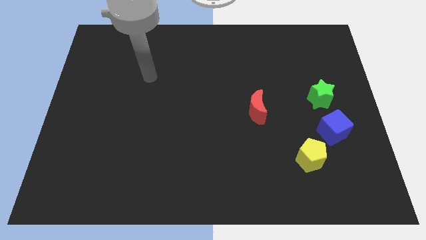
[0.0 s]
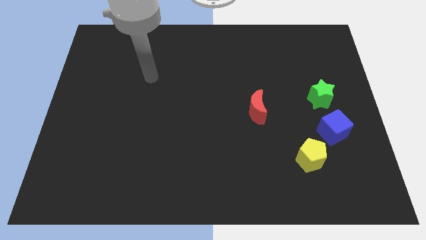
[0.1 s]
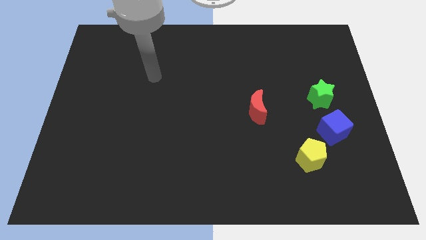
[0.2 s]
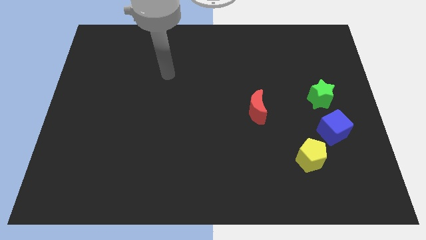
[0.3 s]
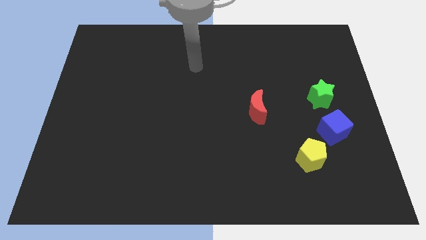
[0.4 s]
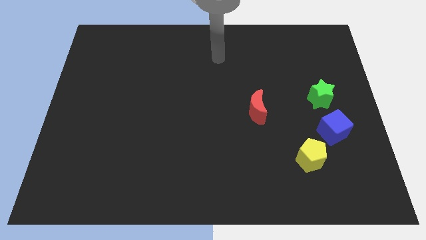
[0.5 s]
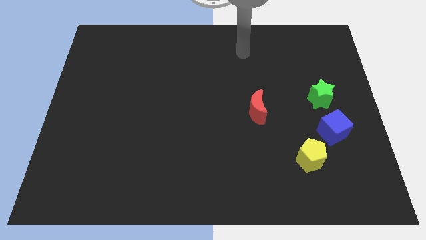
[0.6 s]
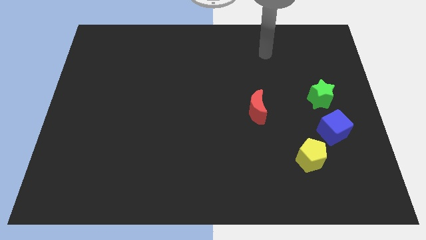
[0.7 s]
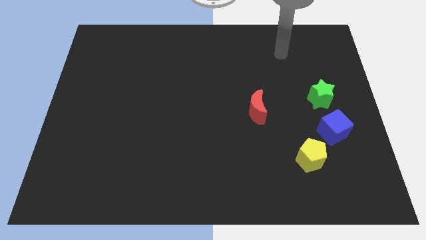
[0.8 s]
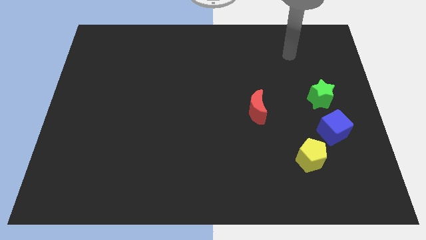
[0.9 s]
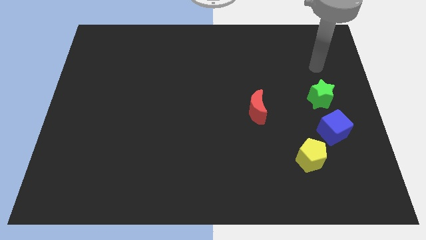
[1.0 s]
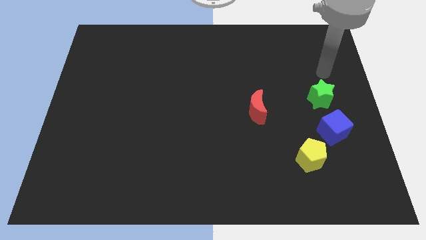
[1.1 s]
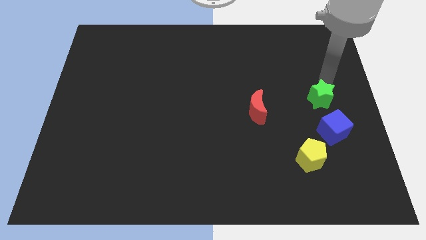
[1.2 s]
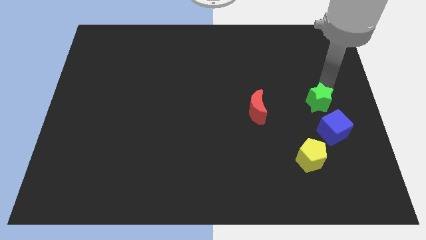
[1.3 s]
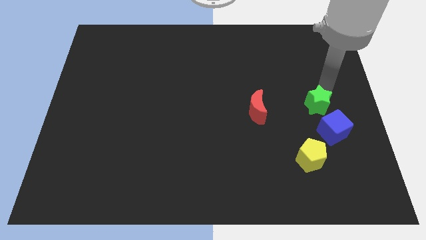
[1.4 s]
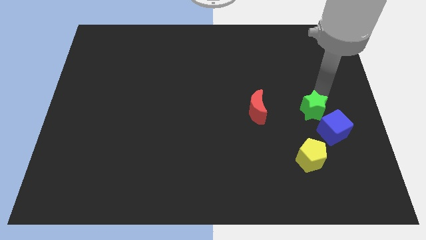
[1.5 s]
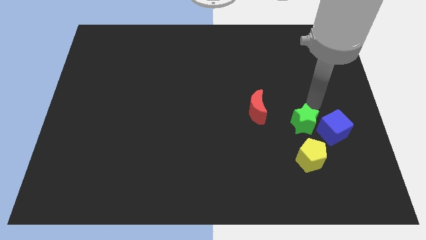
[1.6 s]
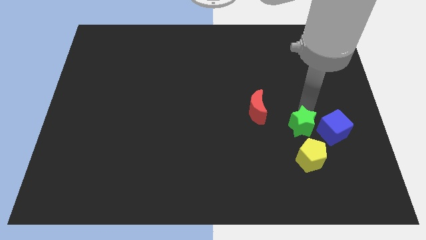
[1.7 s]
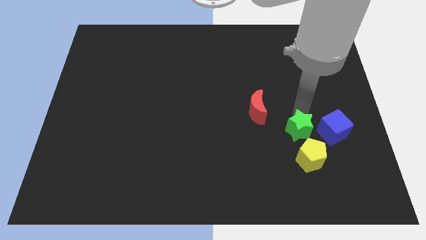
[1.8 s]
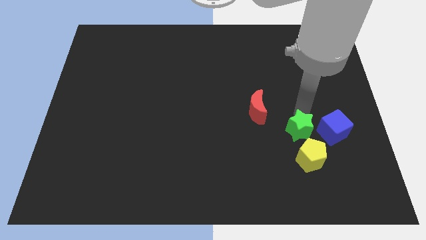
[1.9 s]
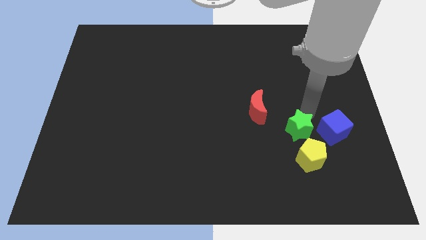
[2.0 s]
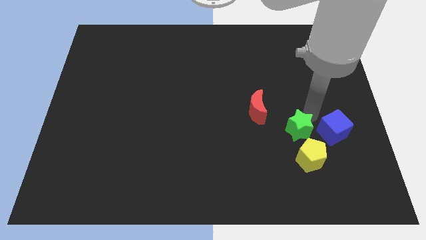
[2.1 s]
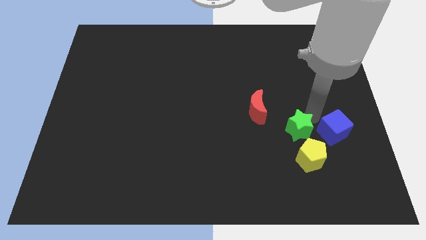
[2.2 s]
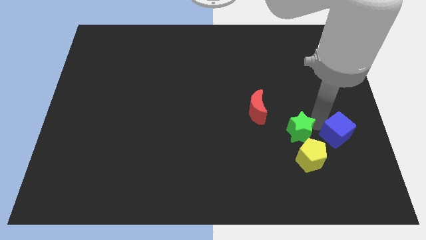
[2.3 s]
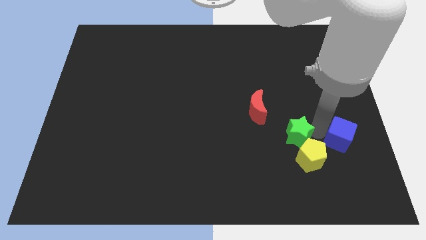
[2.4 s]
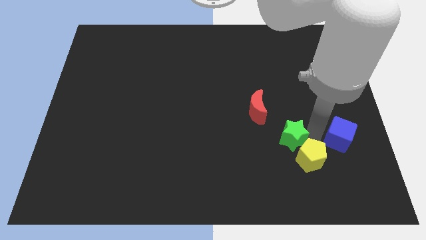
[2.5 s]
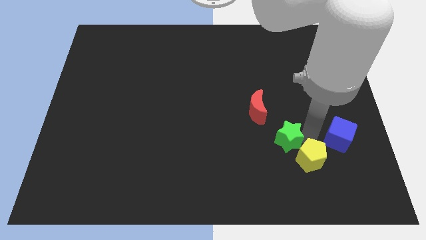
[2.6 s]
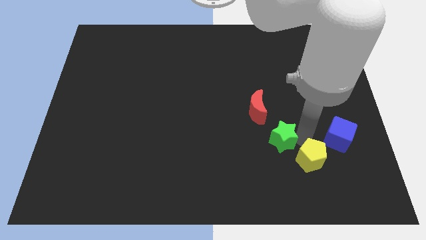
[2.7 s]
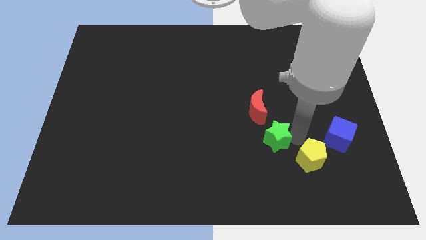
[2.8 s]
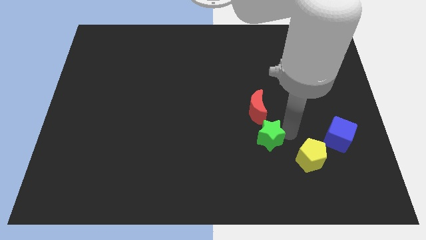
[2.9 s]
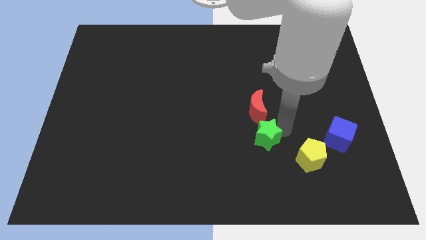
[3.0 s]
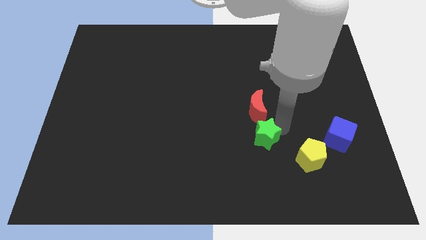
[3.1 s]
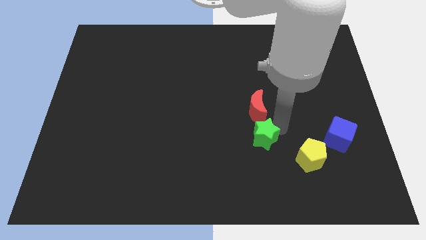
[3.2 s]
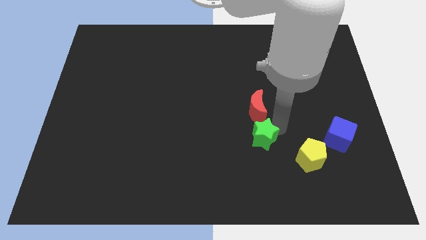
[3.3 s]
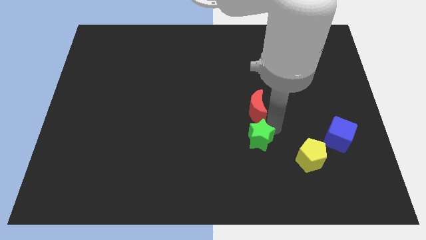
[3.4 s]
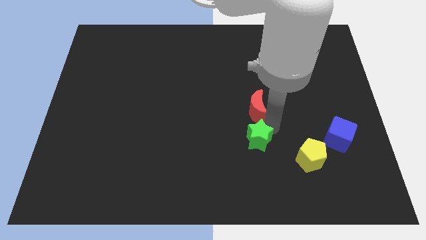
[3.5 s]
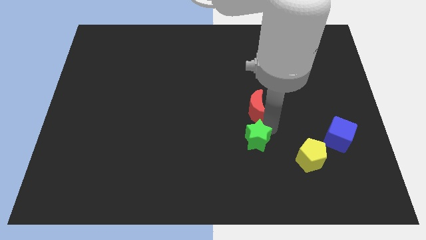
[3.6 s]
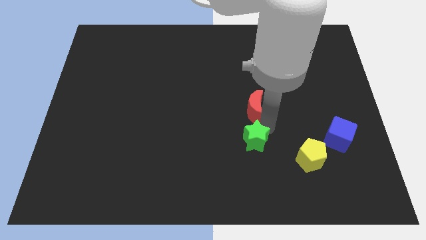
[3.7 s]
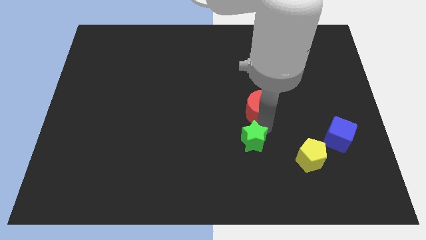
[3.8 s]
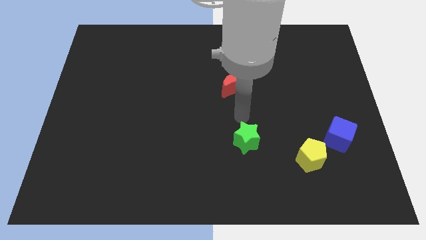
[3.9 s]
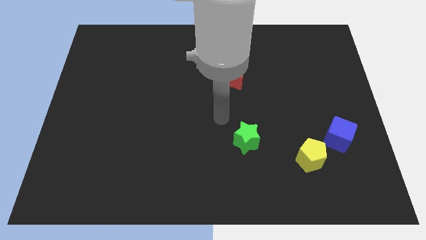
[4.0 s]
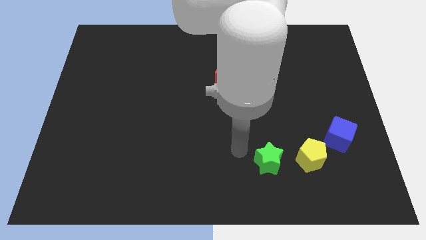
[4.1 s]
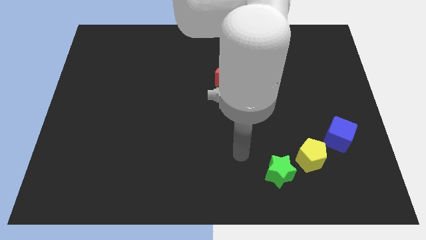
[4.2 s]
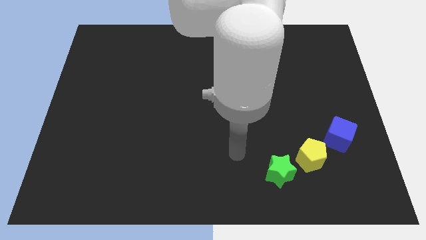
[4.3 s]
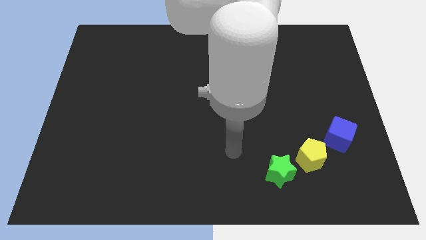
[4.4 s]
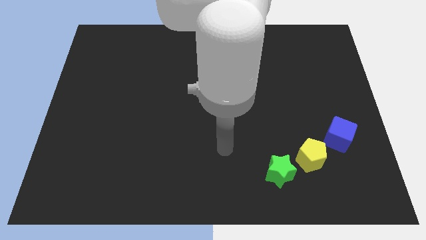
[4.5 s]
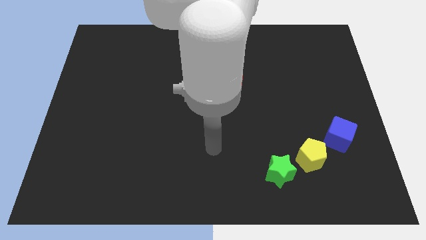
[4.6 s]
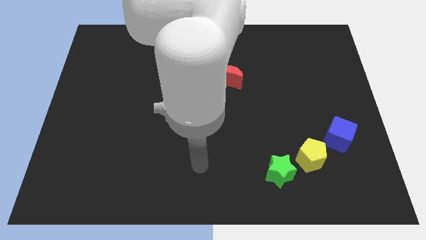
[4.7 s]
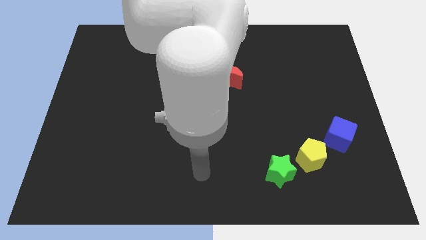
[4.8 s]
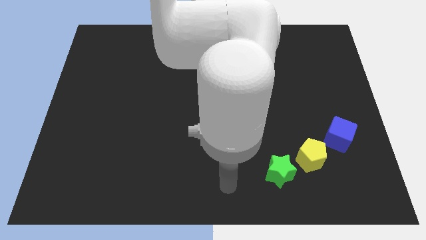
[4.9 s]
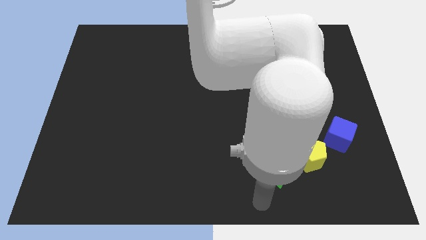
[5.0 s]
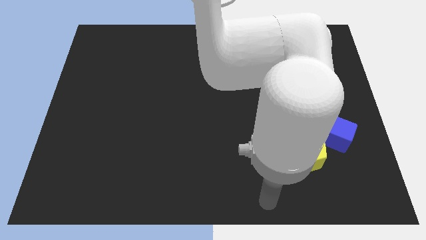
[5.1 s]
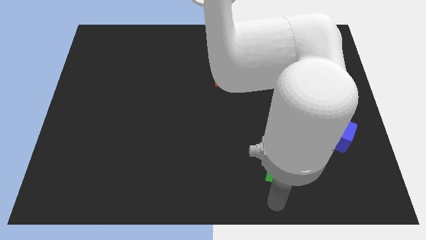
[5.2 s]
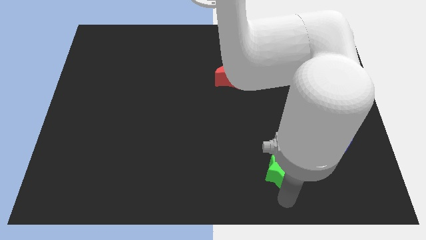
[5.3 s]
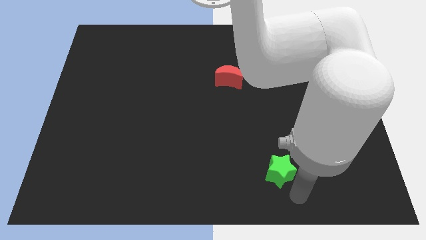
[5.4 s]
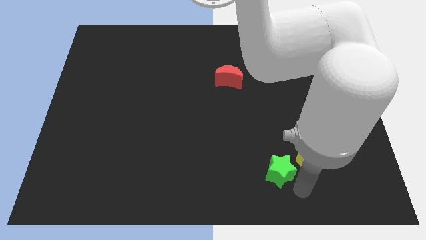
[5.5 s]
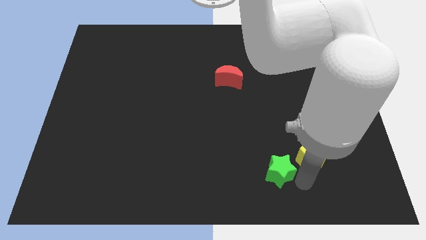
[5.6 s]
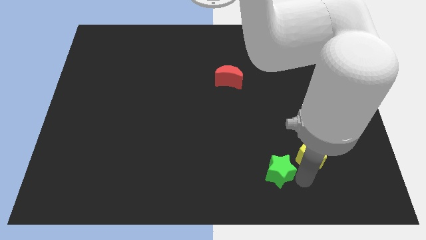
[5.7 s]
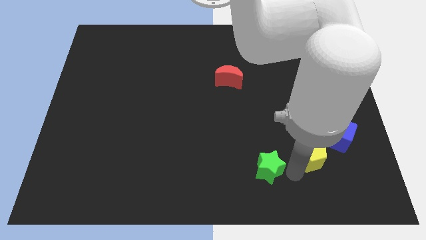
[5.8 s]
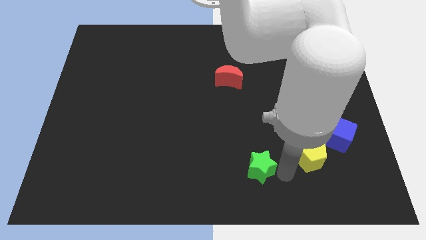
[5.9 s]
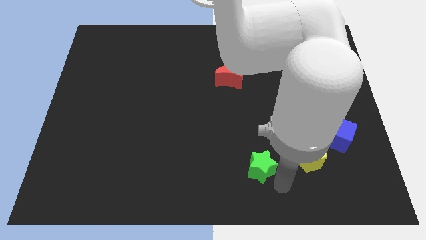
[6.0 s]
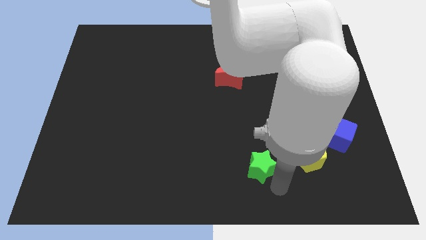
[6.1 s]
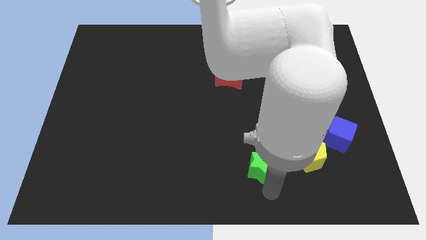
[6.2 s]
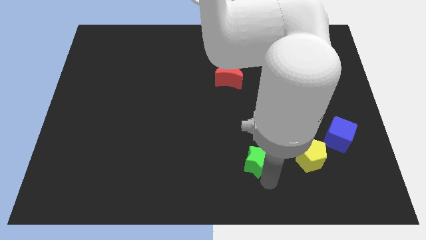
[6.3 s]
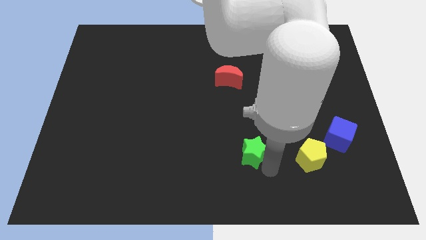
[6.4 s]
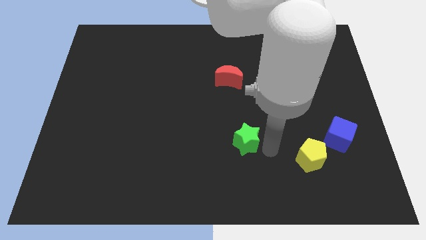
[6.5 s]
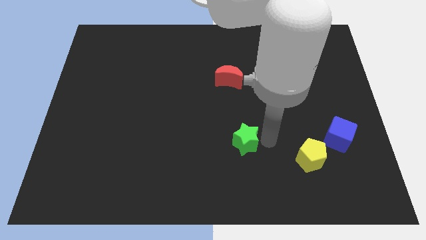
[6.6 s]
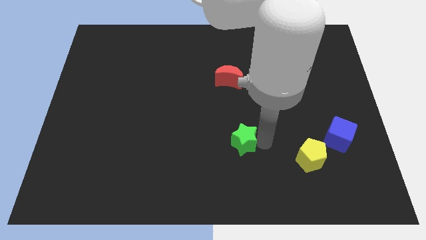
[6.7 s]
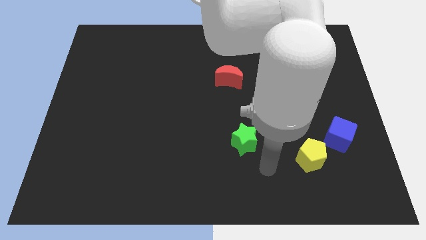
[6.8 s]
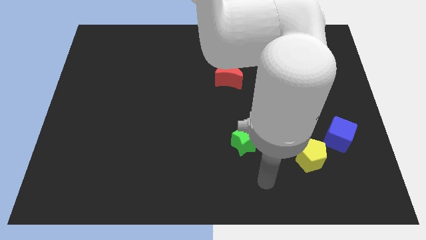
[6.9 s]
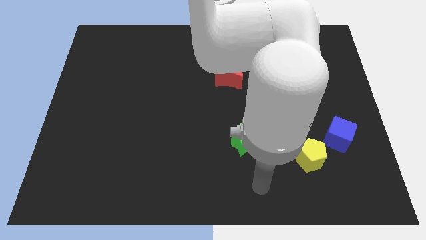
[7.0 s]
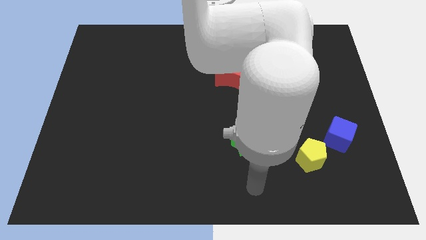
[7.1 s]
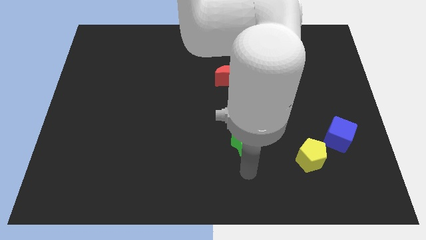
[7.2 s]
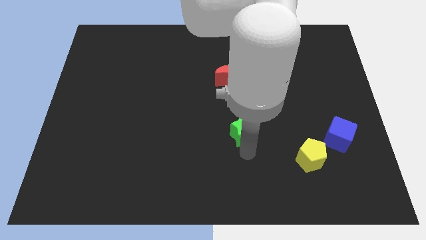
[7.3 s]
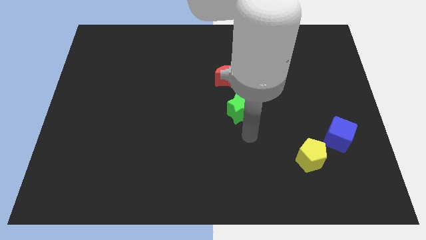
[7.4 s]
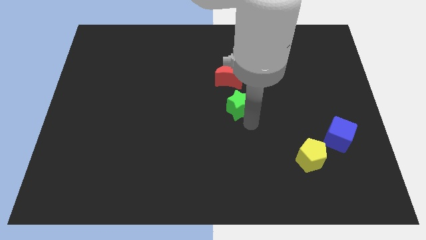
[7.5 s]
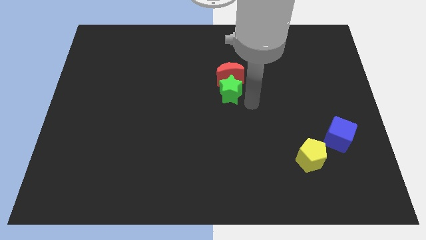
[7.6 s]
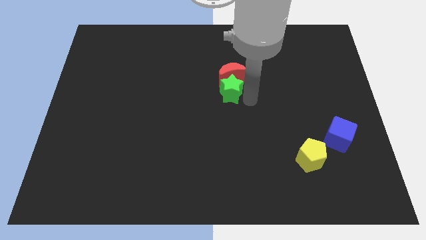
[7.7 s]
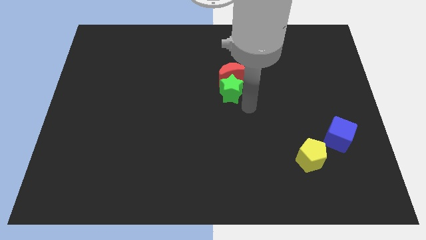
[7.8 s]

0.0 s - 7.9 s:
move the star next to the moon
